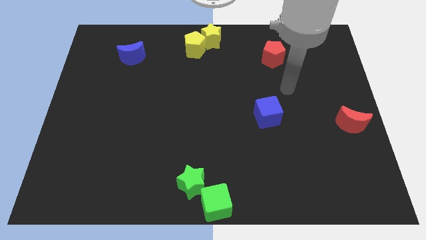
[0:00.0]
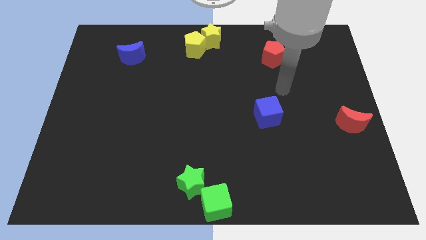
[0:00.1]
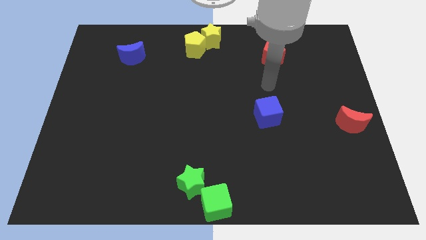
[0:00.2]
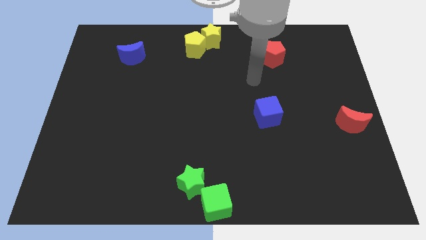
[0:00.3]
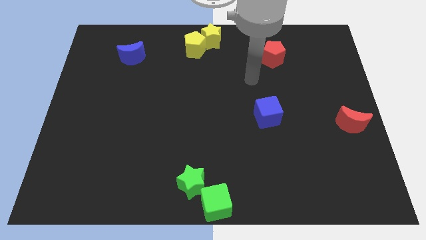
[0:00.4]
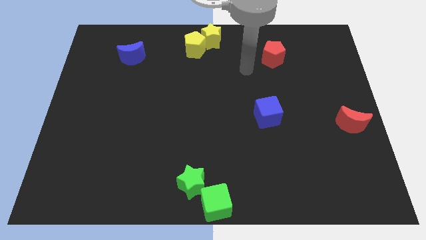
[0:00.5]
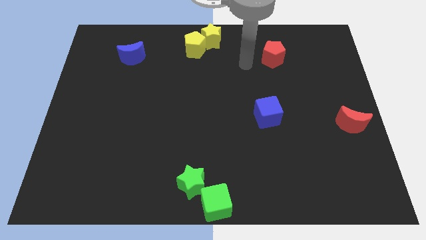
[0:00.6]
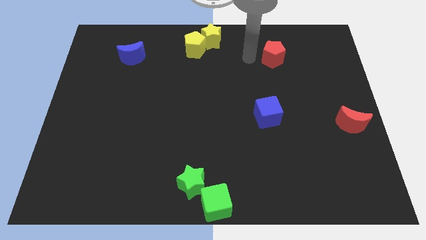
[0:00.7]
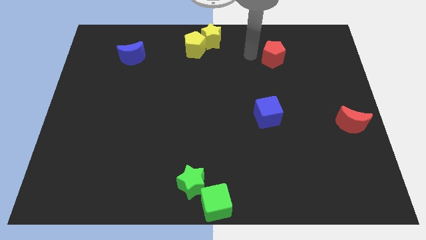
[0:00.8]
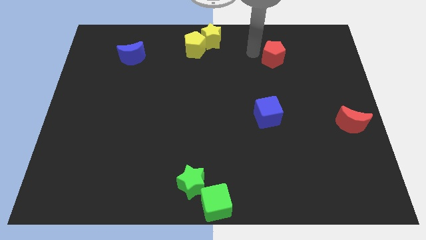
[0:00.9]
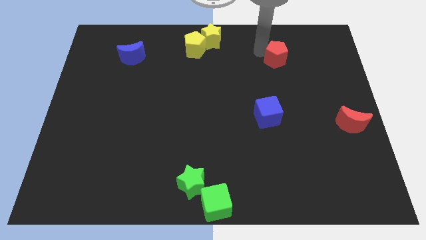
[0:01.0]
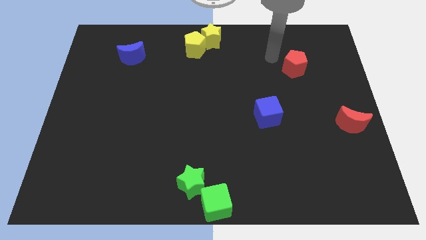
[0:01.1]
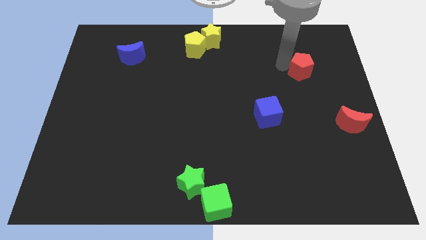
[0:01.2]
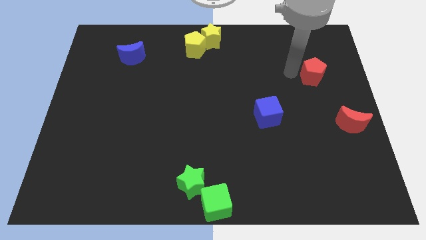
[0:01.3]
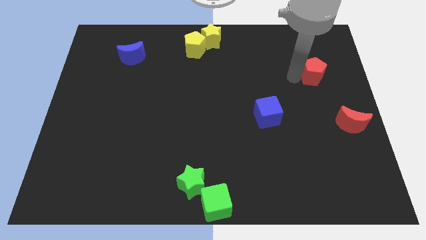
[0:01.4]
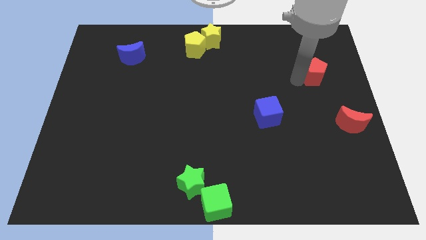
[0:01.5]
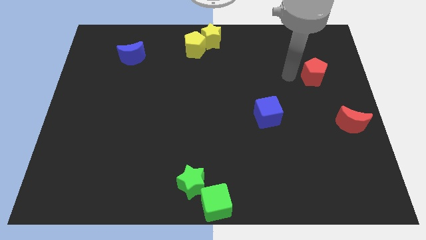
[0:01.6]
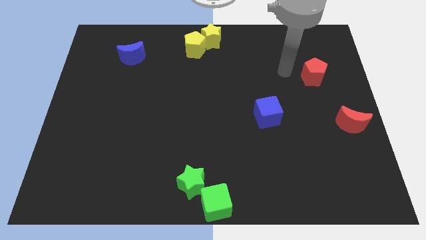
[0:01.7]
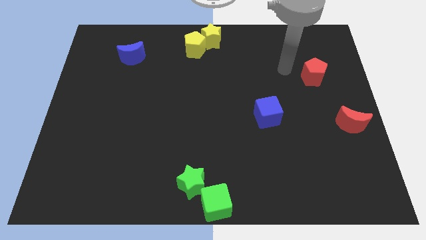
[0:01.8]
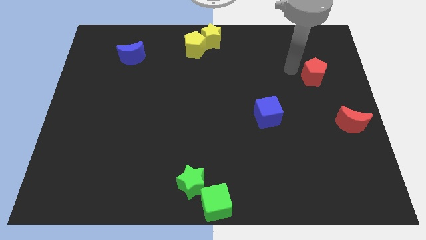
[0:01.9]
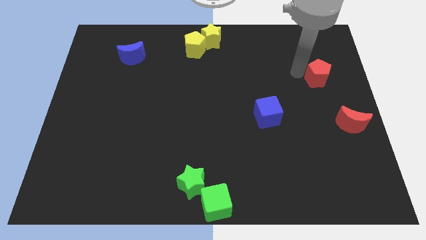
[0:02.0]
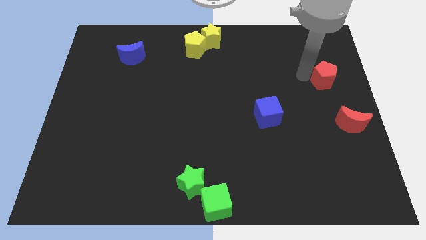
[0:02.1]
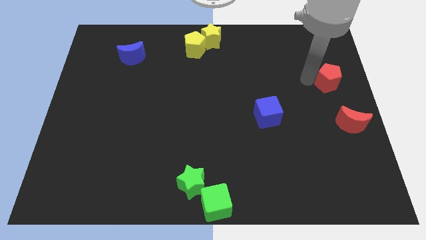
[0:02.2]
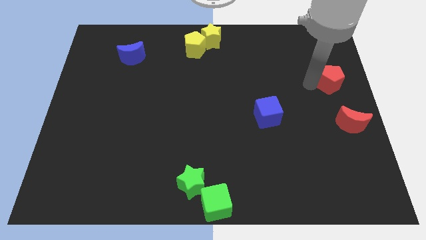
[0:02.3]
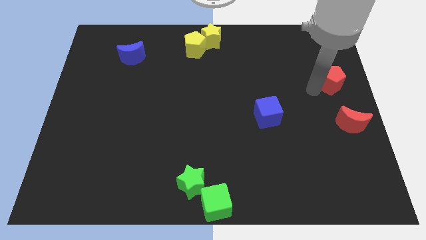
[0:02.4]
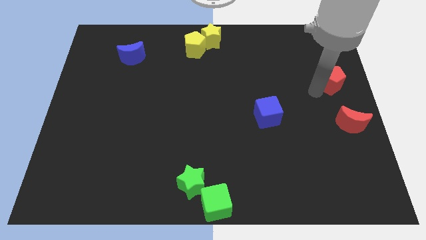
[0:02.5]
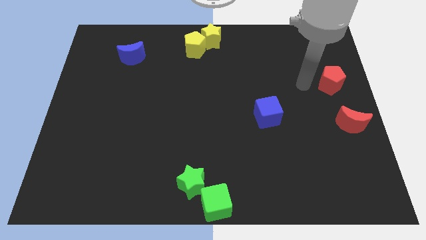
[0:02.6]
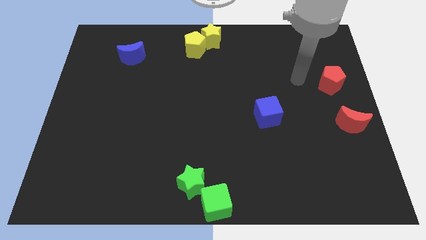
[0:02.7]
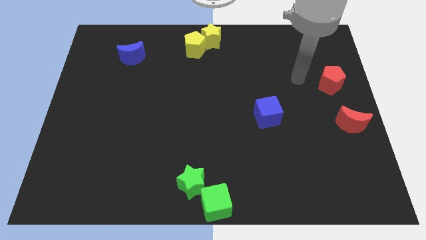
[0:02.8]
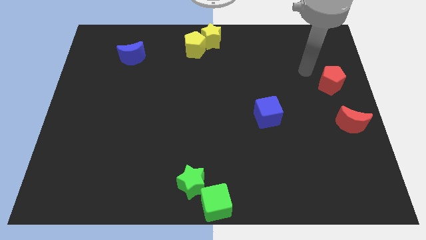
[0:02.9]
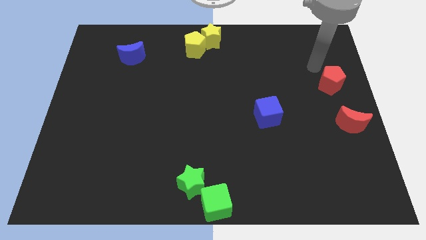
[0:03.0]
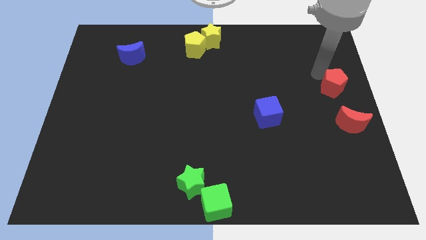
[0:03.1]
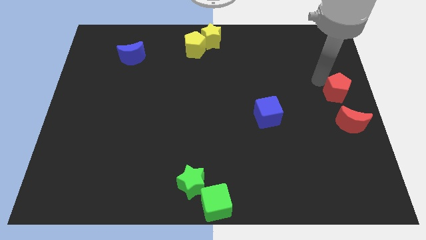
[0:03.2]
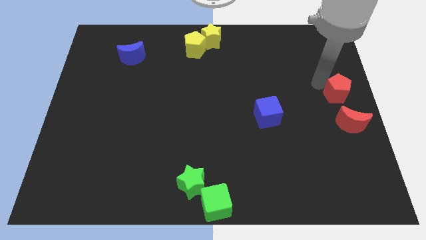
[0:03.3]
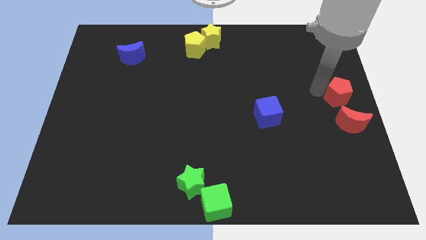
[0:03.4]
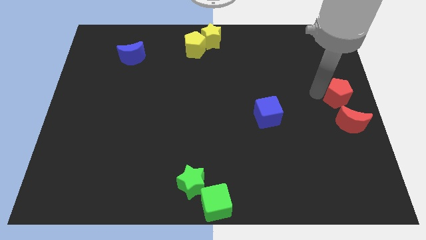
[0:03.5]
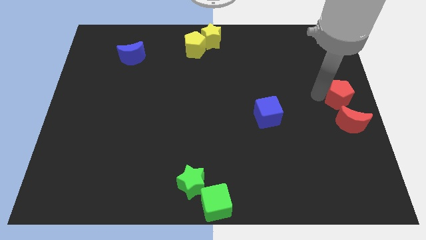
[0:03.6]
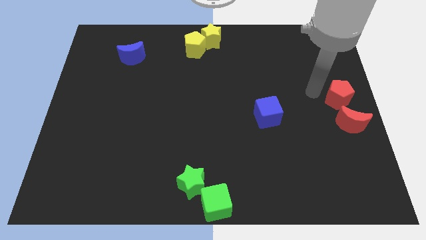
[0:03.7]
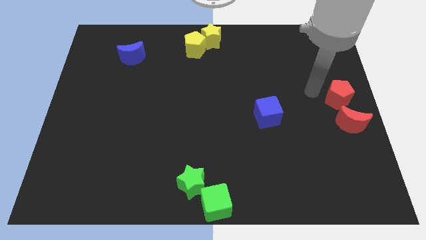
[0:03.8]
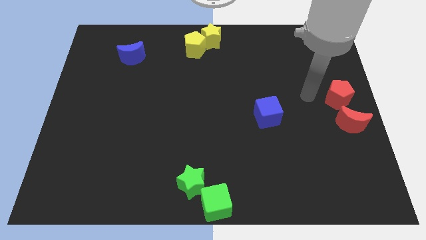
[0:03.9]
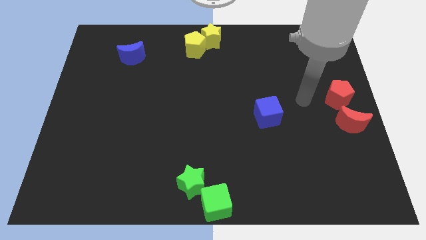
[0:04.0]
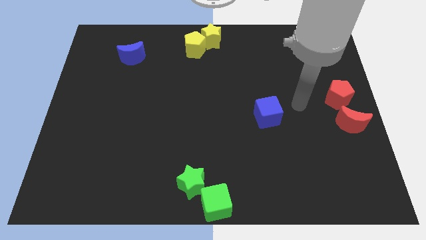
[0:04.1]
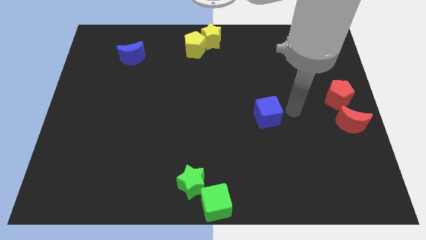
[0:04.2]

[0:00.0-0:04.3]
move the red pentagon above the red crescent

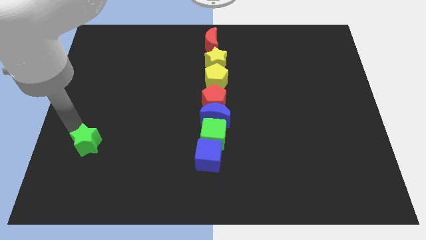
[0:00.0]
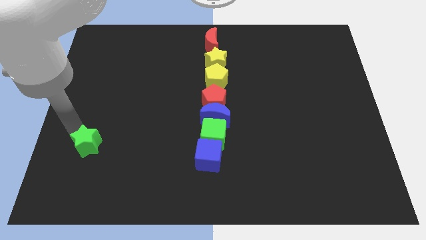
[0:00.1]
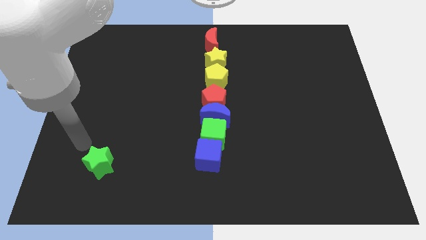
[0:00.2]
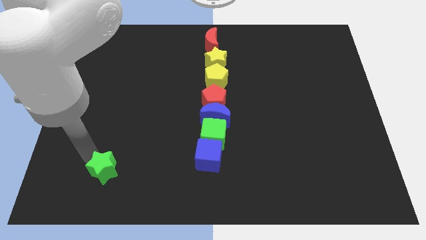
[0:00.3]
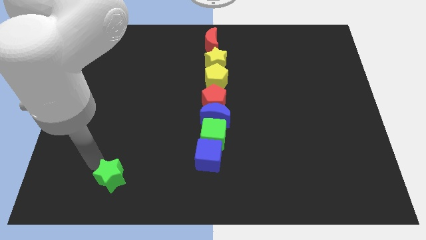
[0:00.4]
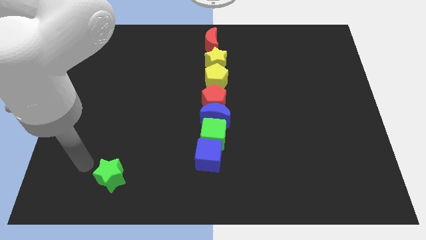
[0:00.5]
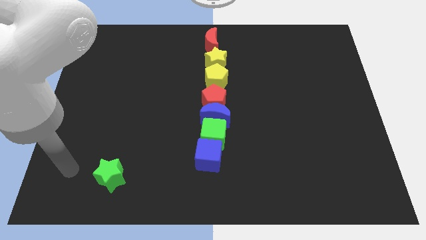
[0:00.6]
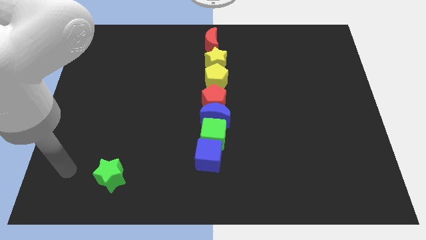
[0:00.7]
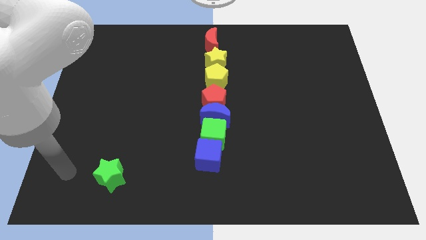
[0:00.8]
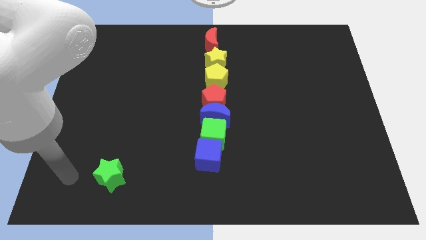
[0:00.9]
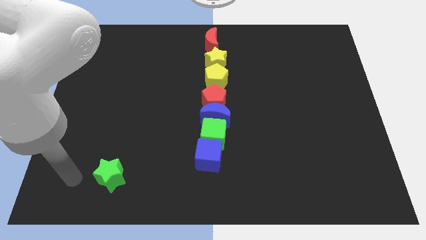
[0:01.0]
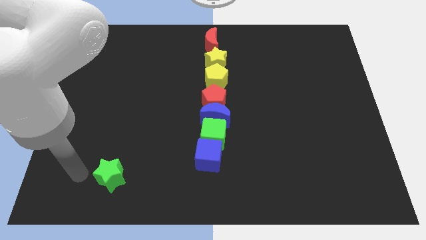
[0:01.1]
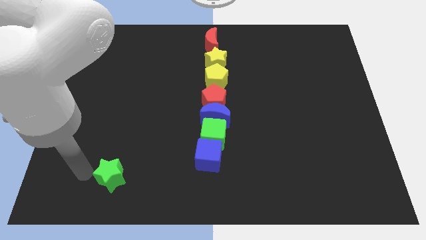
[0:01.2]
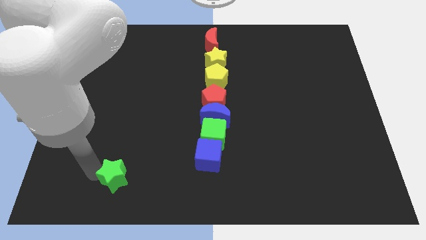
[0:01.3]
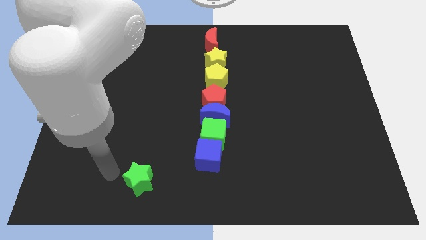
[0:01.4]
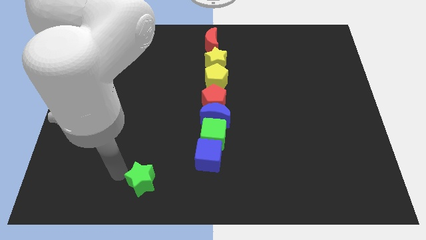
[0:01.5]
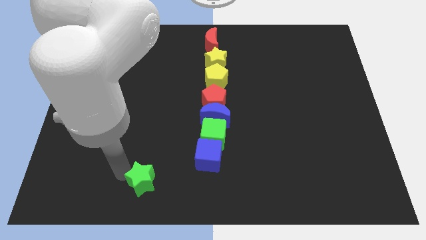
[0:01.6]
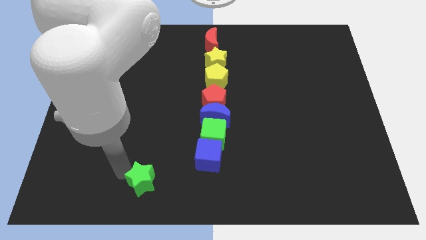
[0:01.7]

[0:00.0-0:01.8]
push the green star towards the bottom center of the board

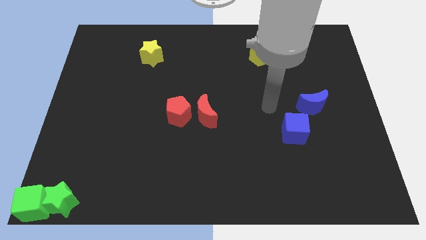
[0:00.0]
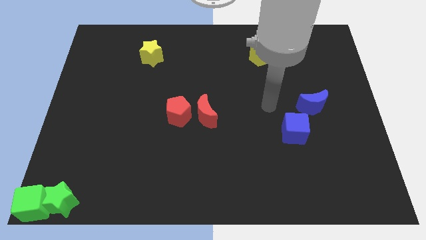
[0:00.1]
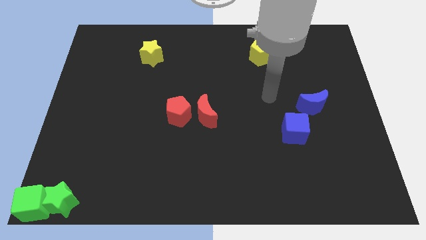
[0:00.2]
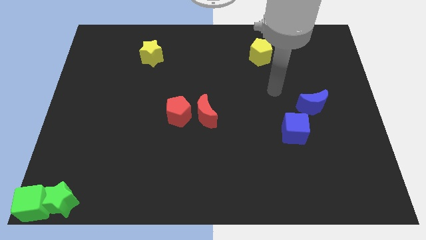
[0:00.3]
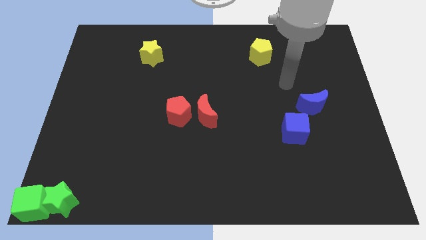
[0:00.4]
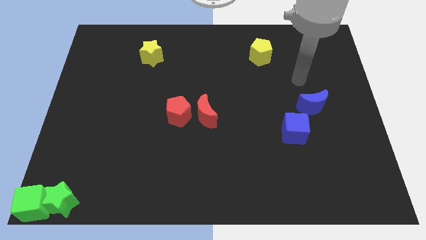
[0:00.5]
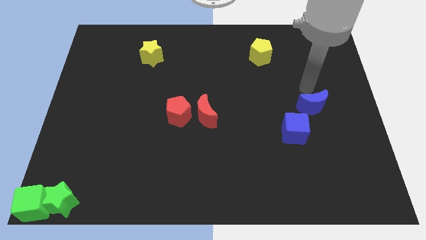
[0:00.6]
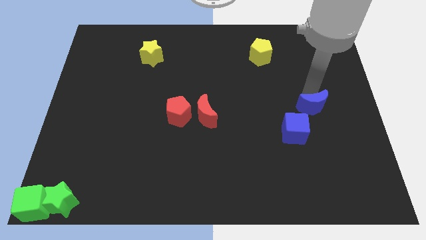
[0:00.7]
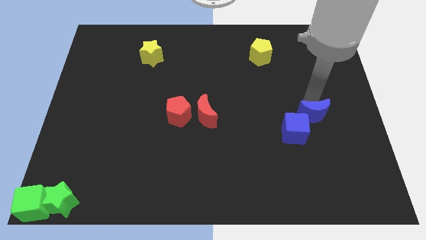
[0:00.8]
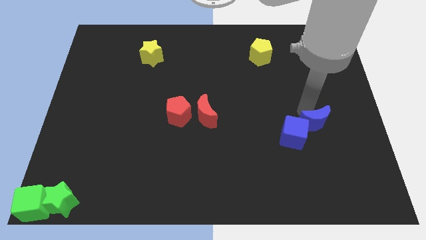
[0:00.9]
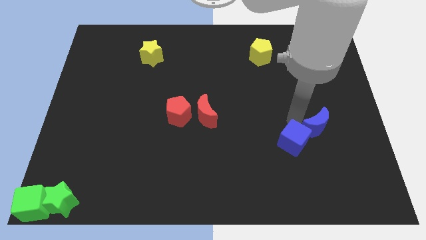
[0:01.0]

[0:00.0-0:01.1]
push blue crescent into the blue cube

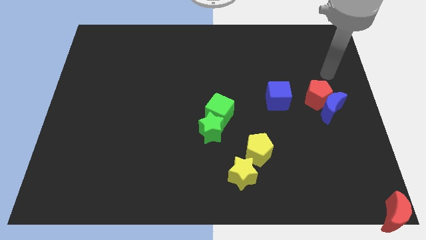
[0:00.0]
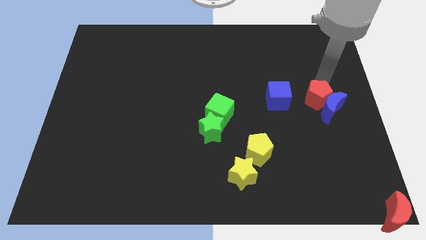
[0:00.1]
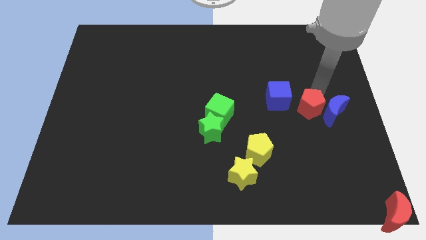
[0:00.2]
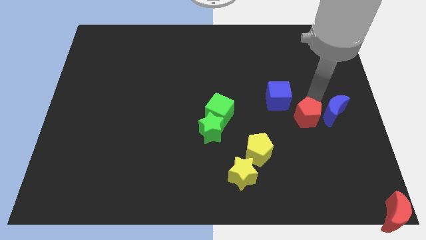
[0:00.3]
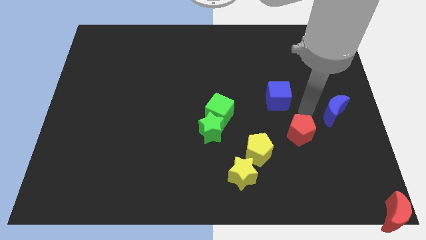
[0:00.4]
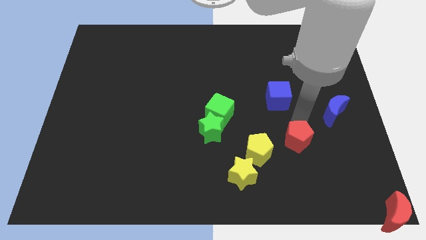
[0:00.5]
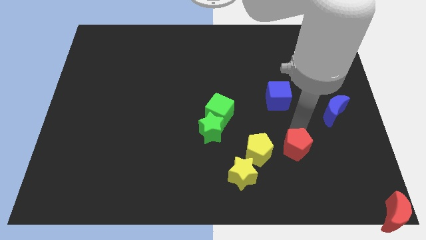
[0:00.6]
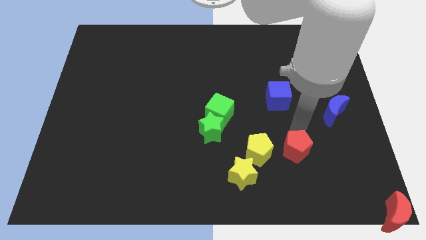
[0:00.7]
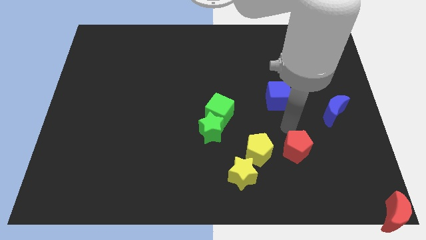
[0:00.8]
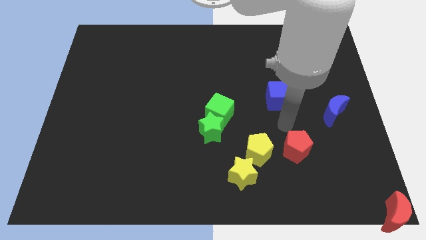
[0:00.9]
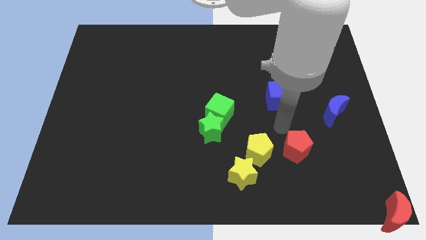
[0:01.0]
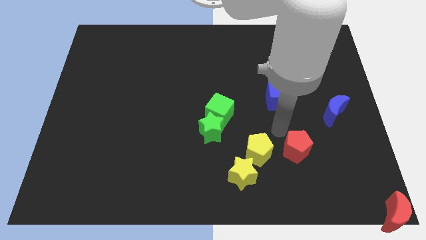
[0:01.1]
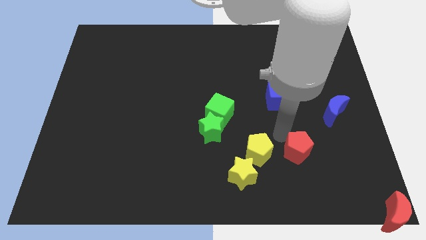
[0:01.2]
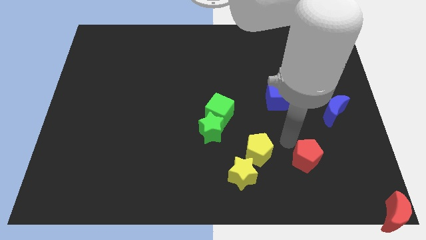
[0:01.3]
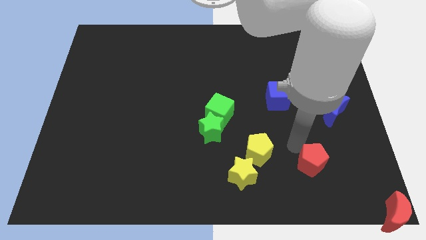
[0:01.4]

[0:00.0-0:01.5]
separate the red pentagon from the blue crescent

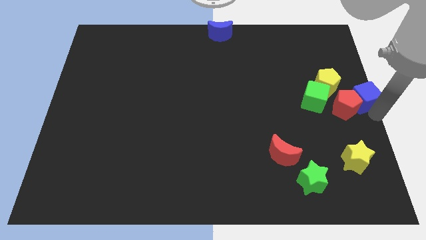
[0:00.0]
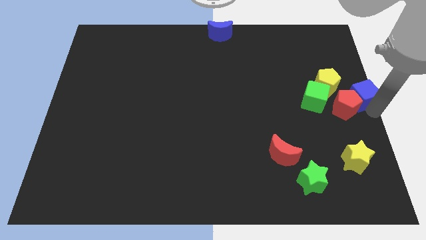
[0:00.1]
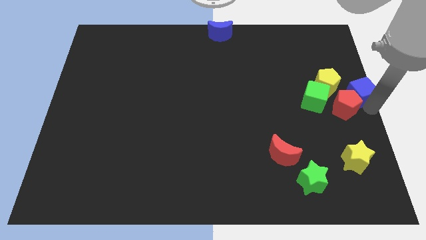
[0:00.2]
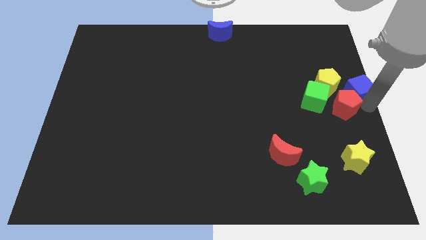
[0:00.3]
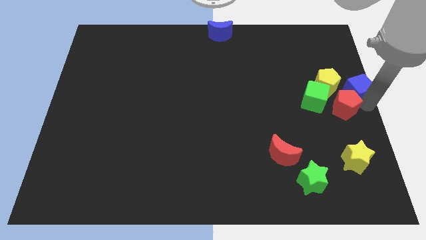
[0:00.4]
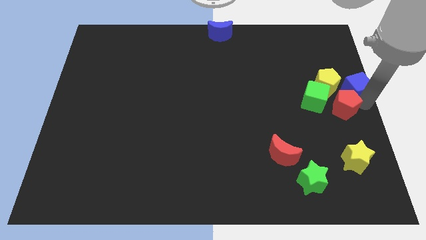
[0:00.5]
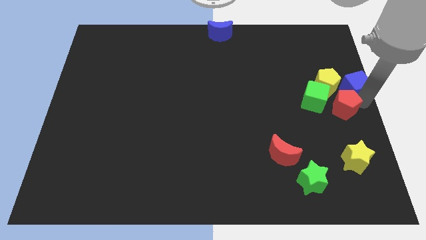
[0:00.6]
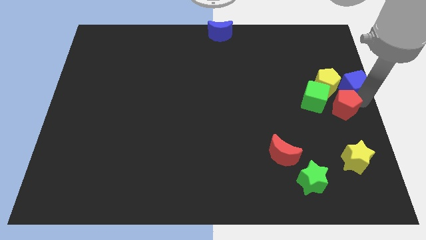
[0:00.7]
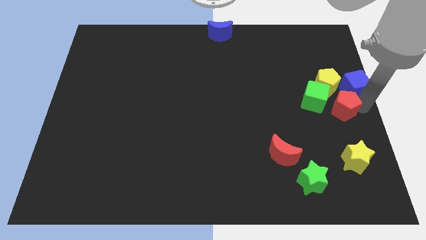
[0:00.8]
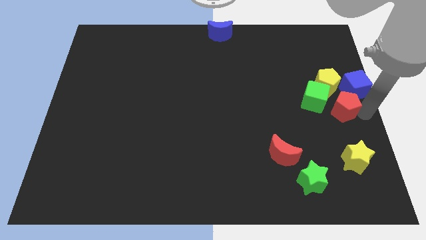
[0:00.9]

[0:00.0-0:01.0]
push blue cube slightly upwards
